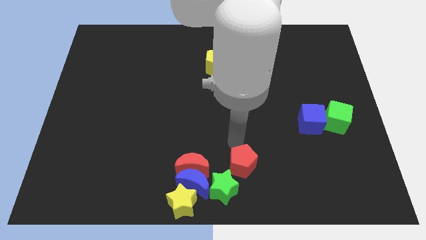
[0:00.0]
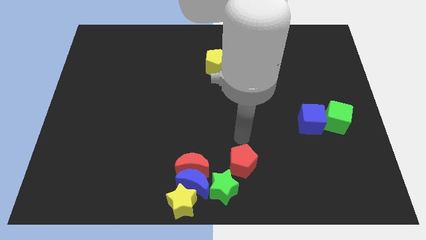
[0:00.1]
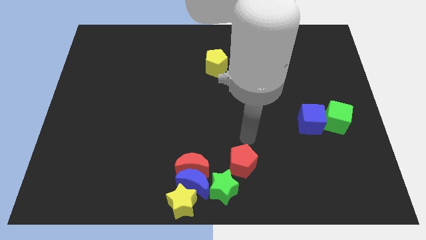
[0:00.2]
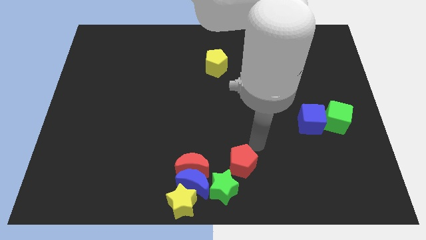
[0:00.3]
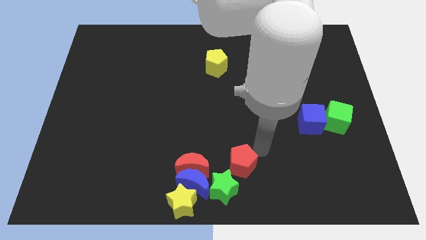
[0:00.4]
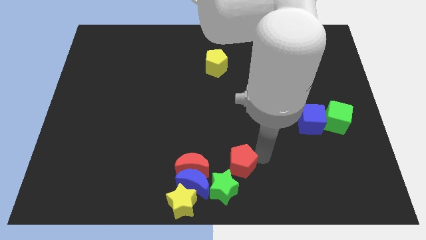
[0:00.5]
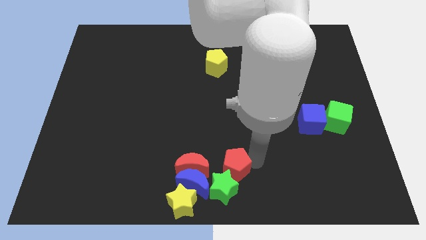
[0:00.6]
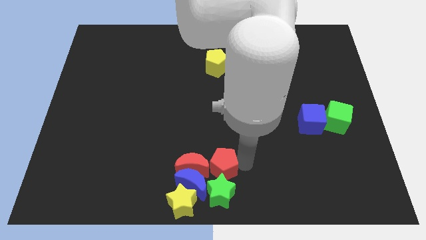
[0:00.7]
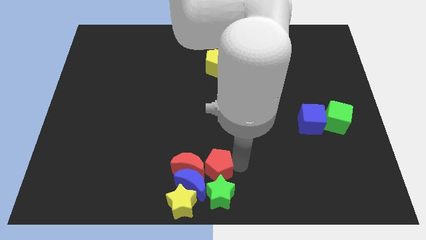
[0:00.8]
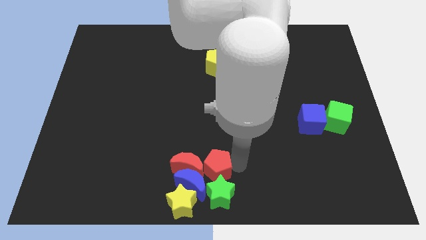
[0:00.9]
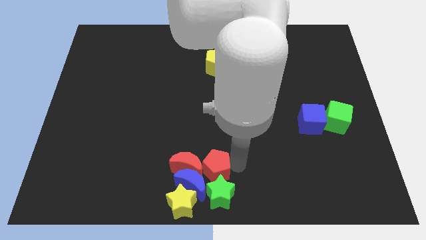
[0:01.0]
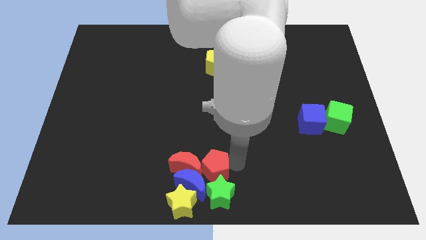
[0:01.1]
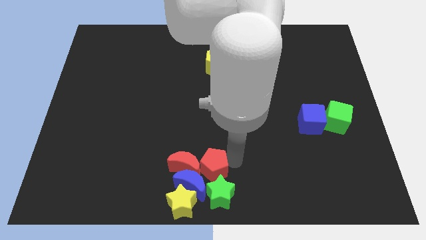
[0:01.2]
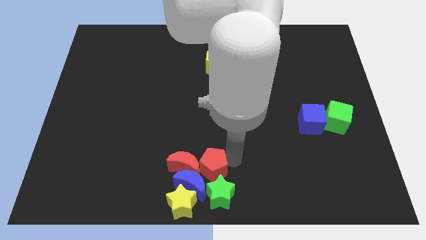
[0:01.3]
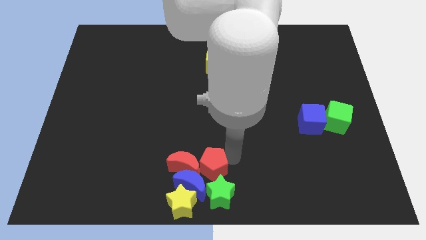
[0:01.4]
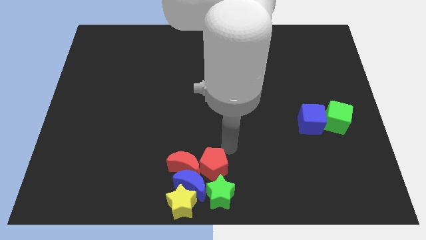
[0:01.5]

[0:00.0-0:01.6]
push the red pentagon into the red crescent

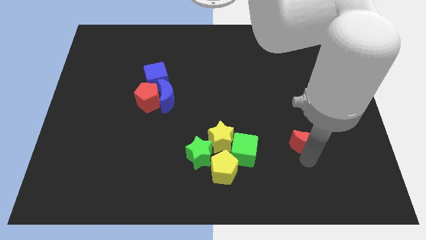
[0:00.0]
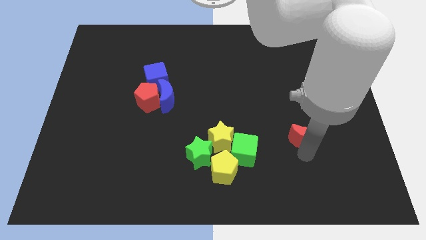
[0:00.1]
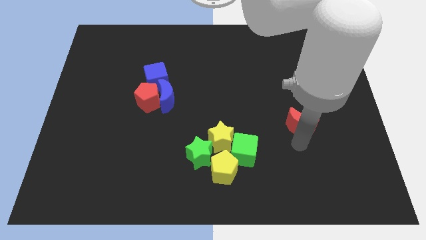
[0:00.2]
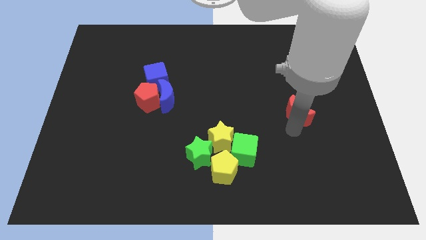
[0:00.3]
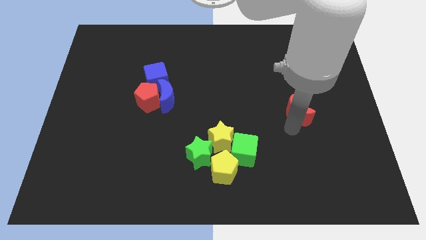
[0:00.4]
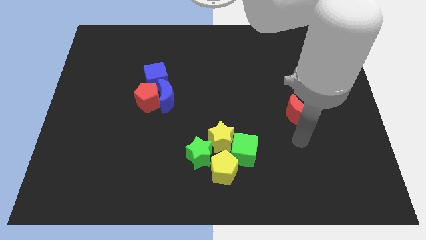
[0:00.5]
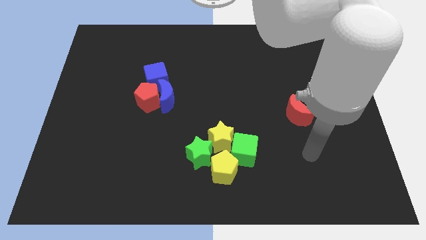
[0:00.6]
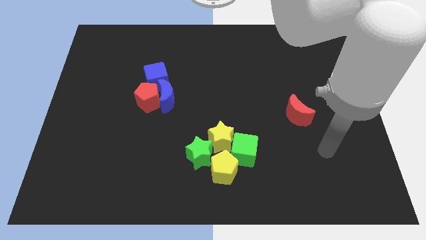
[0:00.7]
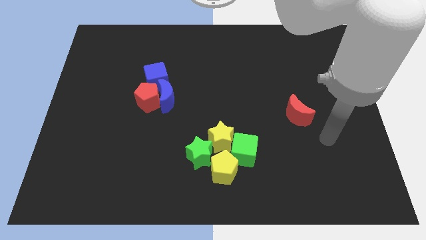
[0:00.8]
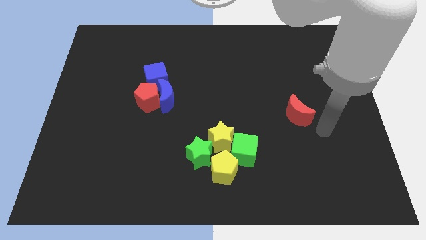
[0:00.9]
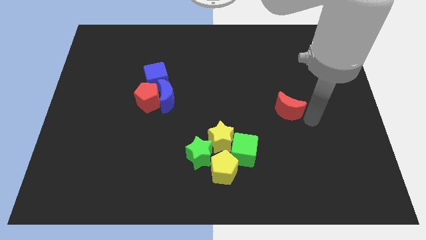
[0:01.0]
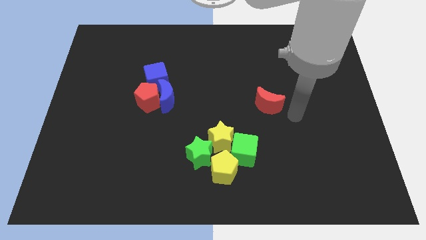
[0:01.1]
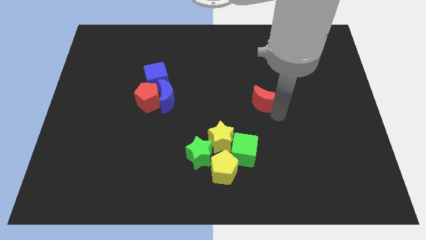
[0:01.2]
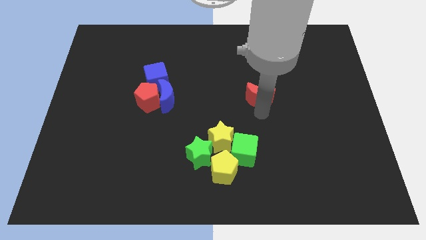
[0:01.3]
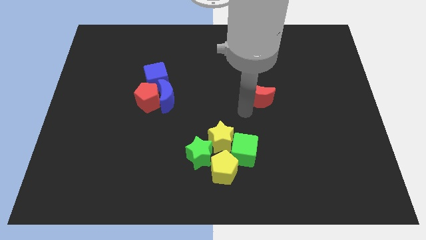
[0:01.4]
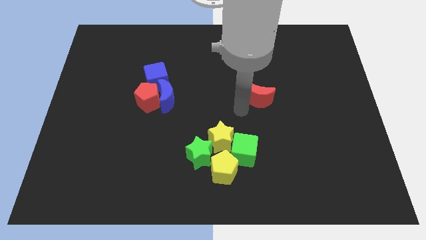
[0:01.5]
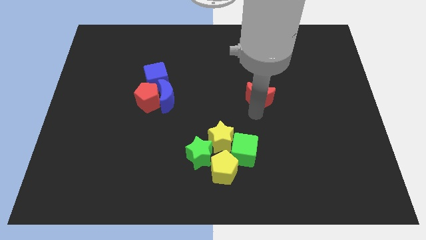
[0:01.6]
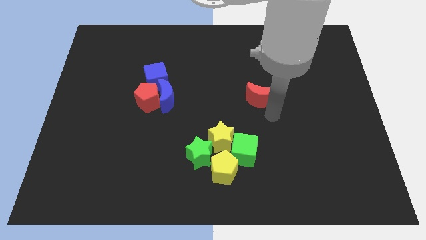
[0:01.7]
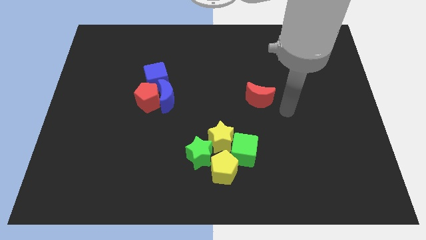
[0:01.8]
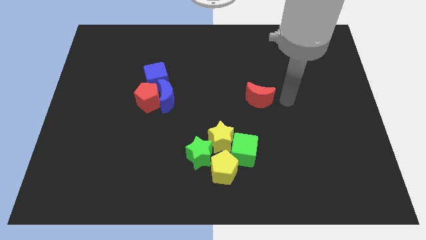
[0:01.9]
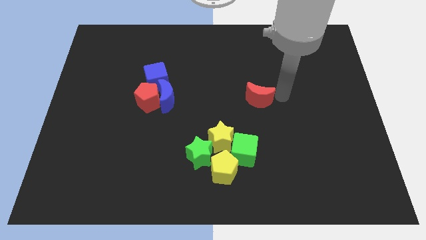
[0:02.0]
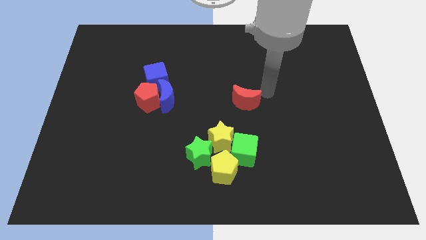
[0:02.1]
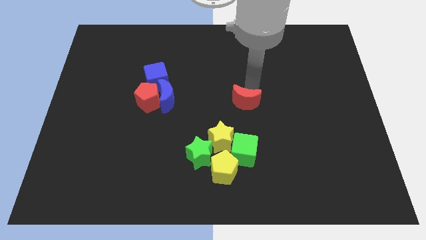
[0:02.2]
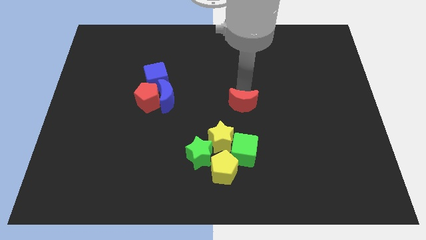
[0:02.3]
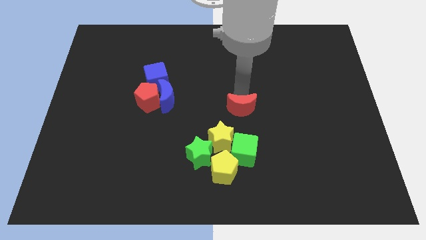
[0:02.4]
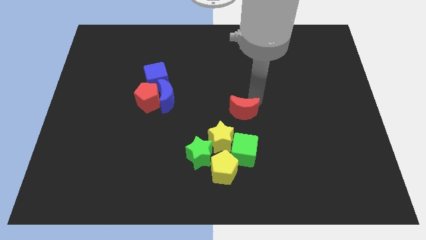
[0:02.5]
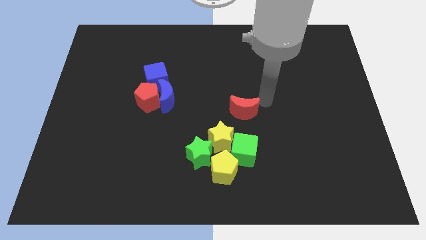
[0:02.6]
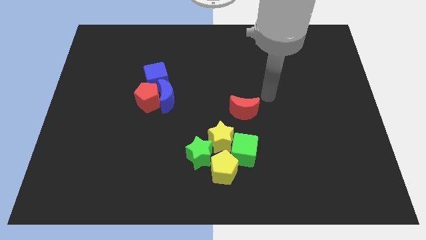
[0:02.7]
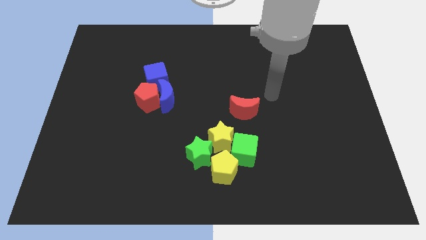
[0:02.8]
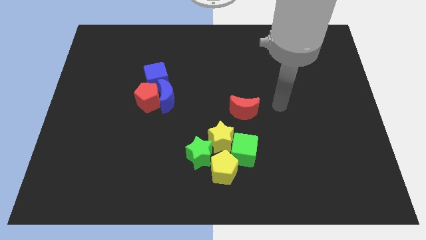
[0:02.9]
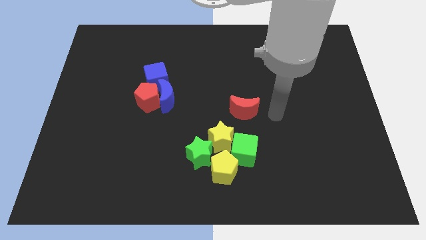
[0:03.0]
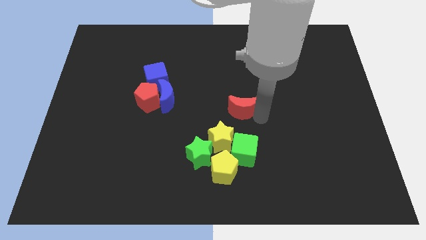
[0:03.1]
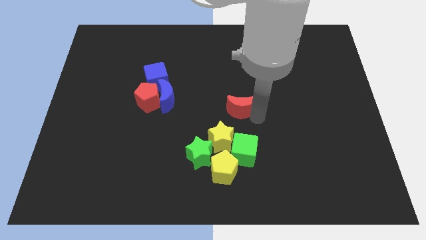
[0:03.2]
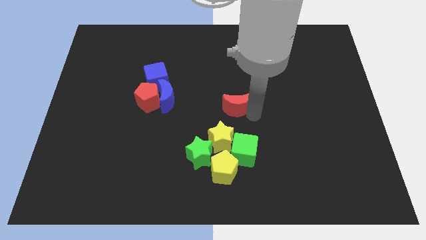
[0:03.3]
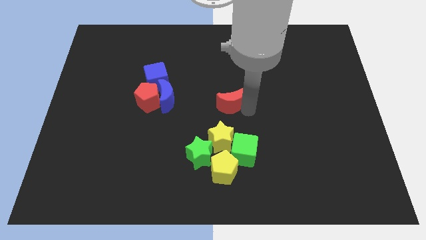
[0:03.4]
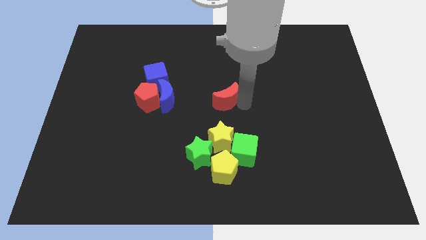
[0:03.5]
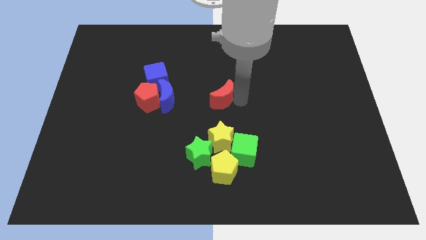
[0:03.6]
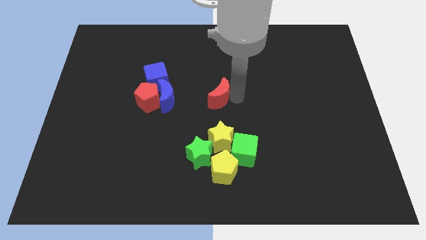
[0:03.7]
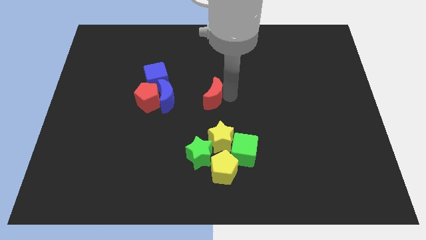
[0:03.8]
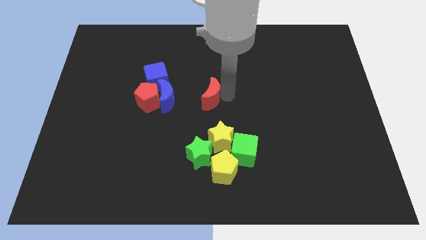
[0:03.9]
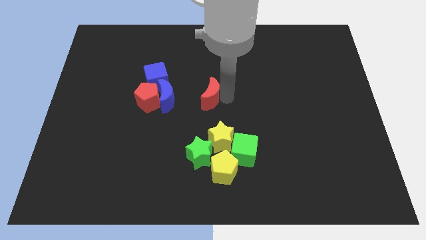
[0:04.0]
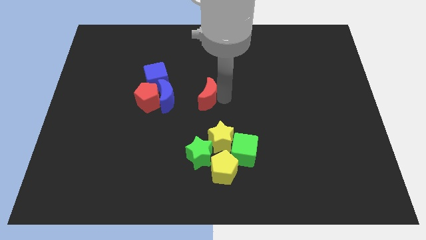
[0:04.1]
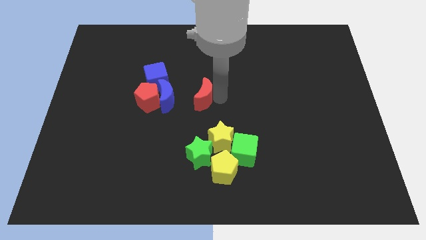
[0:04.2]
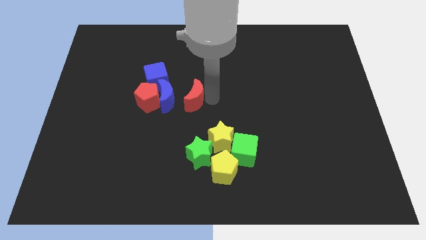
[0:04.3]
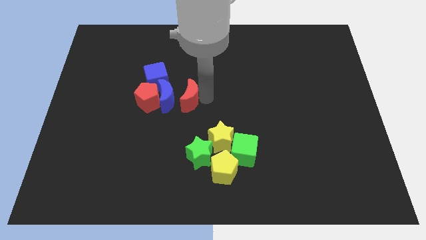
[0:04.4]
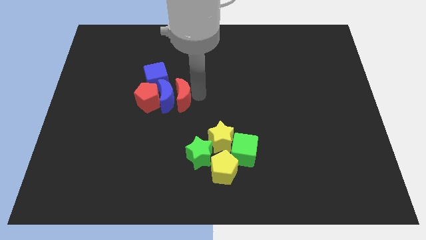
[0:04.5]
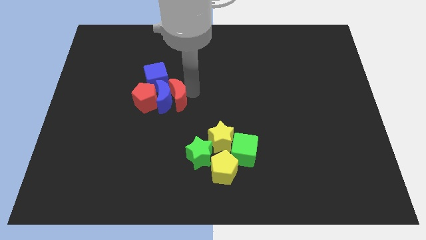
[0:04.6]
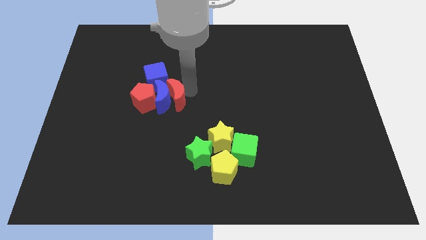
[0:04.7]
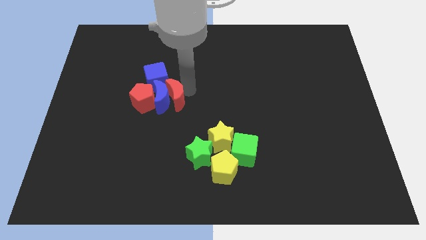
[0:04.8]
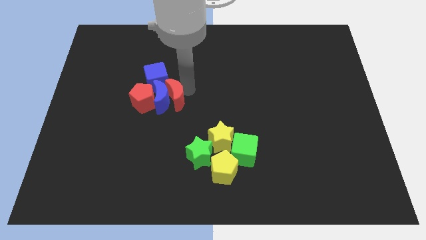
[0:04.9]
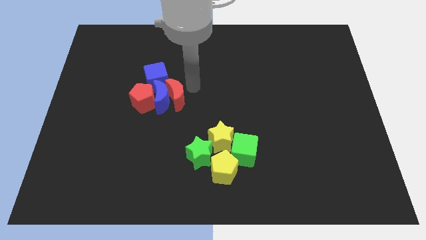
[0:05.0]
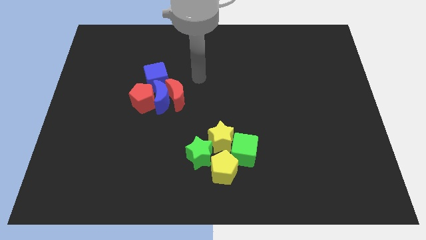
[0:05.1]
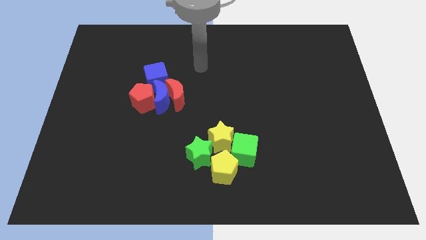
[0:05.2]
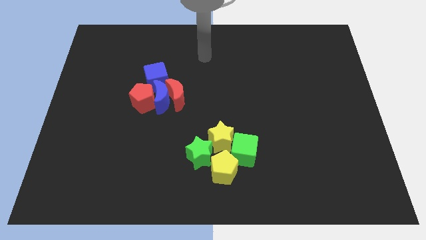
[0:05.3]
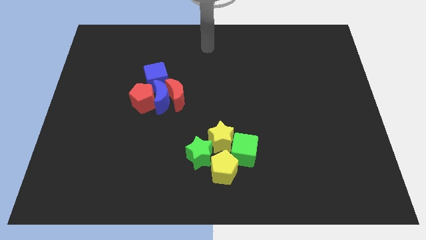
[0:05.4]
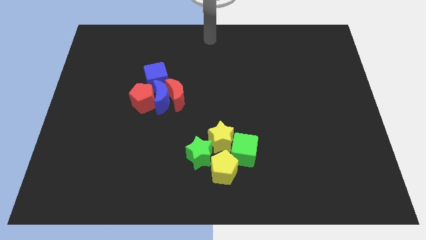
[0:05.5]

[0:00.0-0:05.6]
drag red moon into group of blocks

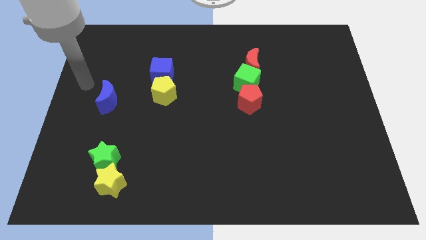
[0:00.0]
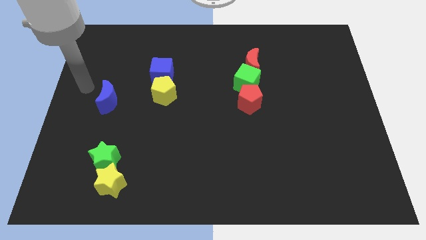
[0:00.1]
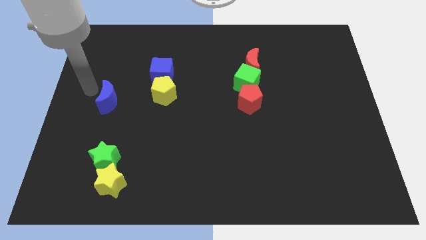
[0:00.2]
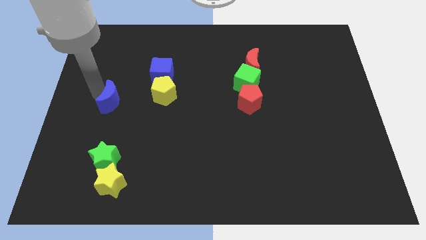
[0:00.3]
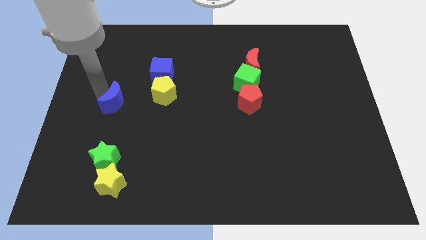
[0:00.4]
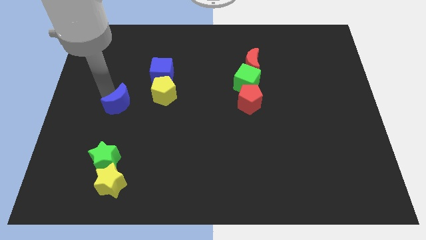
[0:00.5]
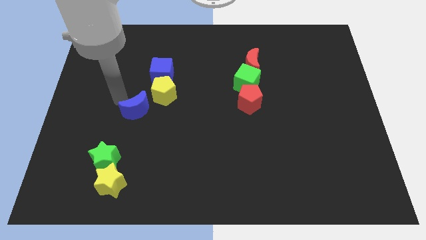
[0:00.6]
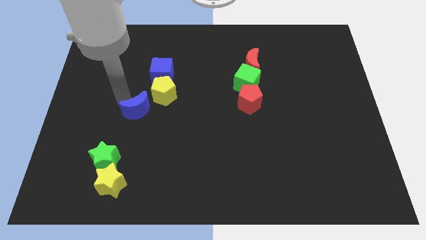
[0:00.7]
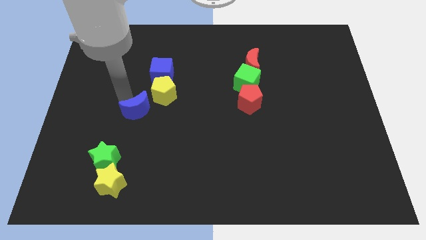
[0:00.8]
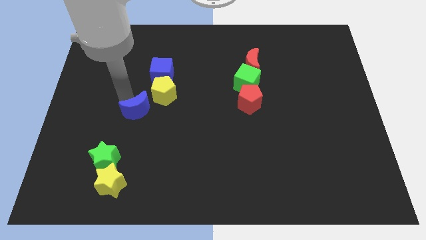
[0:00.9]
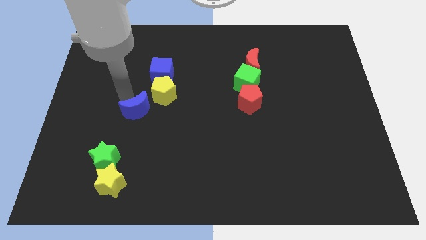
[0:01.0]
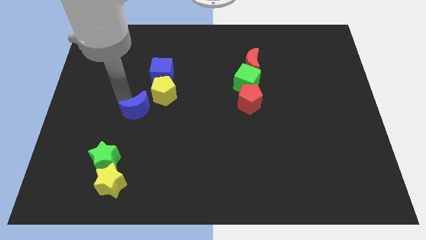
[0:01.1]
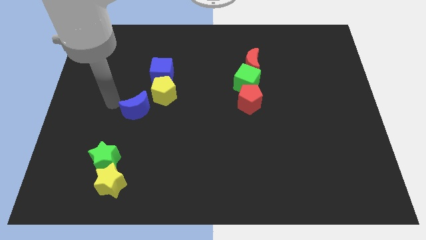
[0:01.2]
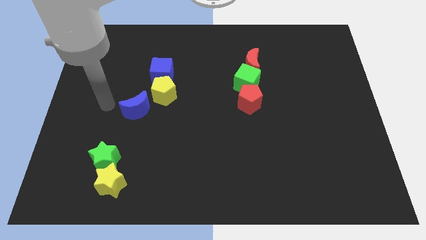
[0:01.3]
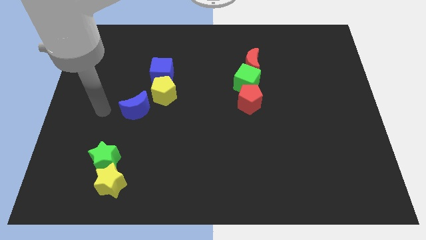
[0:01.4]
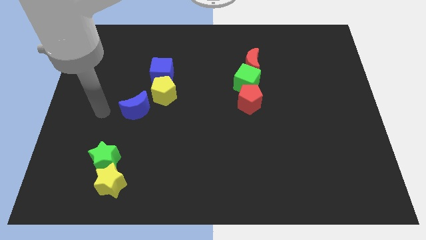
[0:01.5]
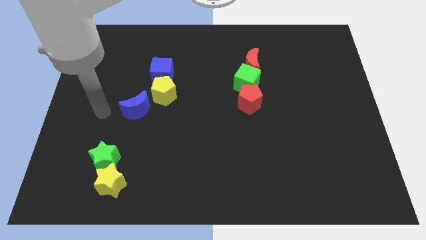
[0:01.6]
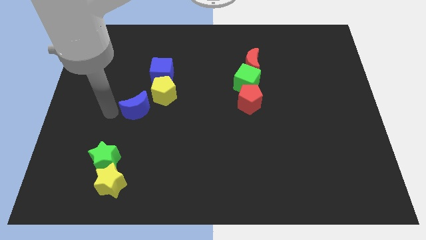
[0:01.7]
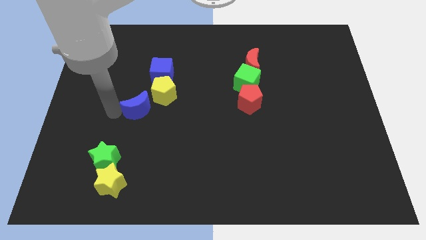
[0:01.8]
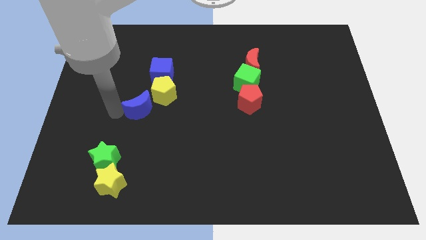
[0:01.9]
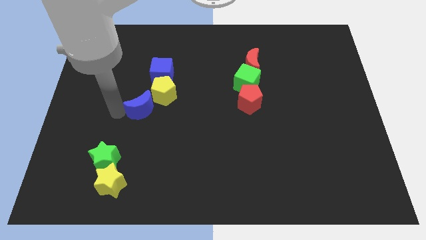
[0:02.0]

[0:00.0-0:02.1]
slide blue moon into yellow pentagon
